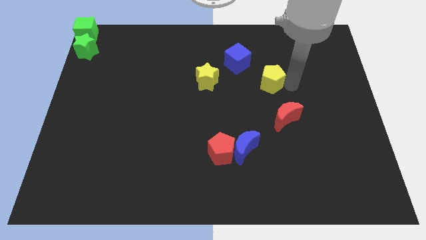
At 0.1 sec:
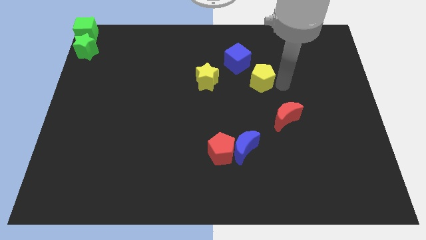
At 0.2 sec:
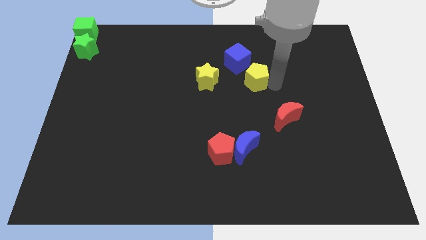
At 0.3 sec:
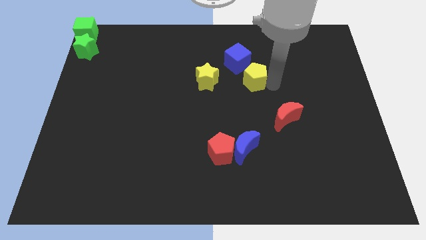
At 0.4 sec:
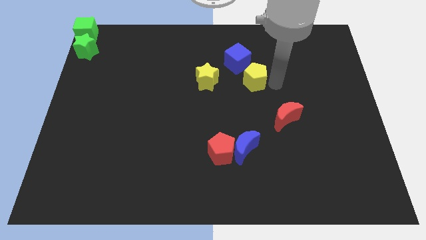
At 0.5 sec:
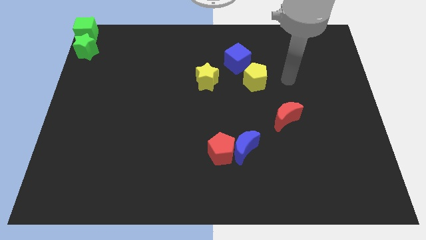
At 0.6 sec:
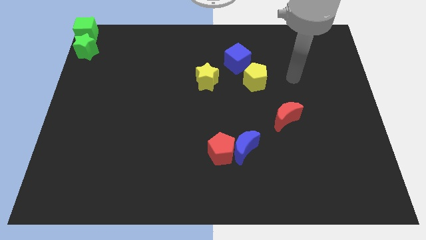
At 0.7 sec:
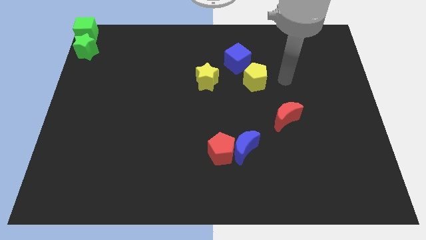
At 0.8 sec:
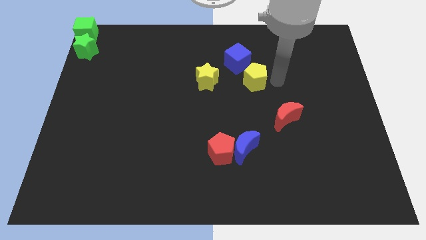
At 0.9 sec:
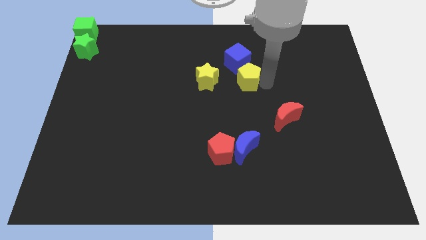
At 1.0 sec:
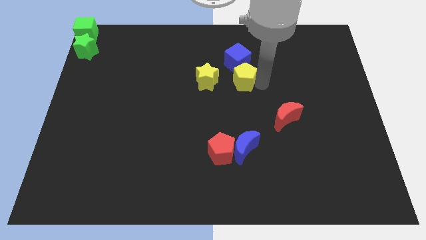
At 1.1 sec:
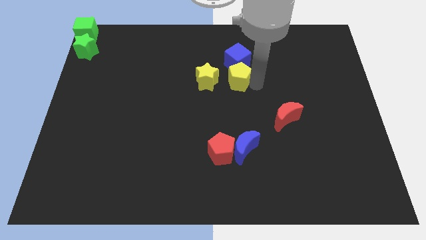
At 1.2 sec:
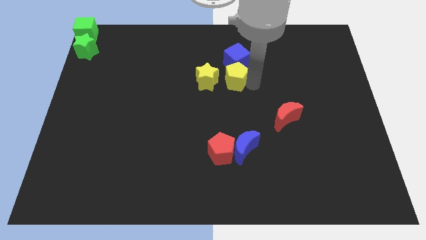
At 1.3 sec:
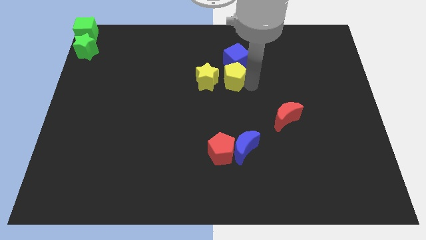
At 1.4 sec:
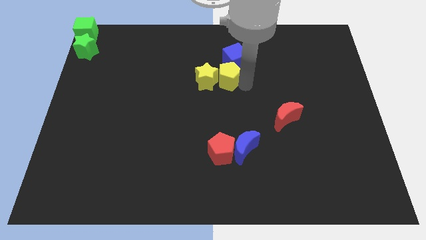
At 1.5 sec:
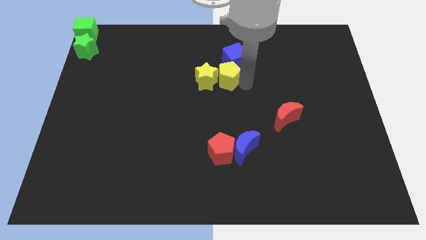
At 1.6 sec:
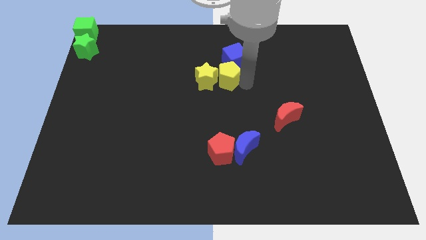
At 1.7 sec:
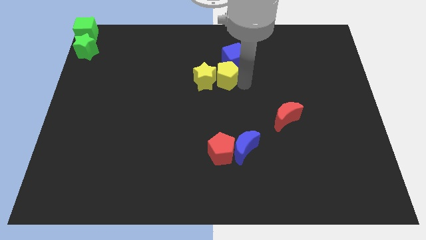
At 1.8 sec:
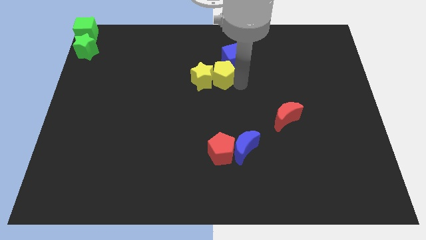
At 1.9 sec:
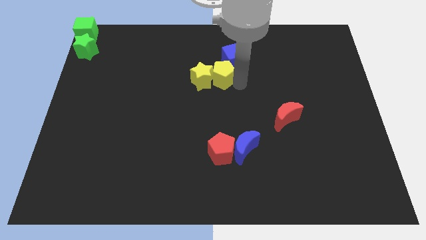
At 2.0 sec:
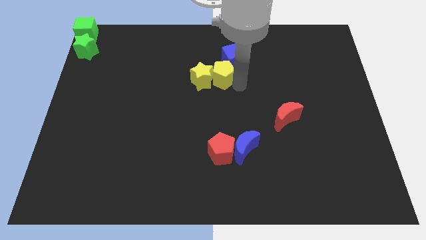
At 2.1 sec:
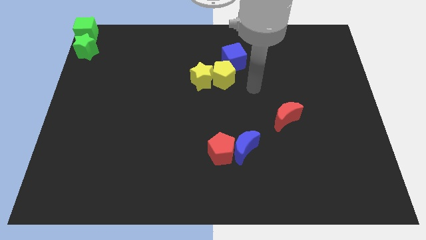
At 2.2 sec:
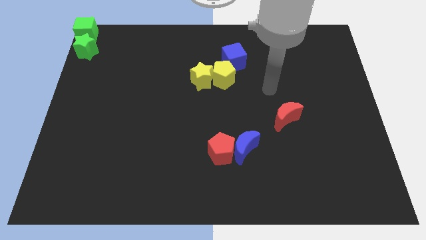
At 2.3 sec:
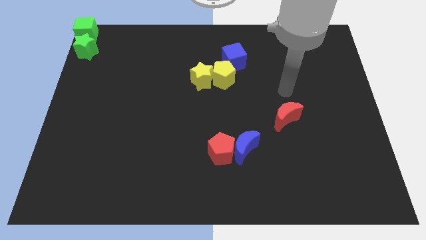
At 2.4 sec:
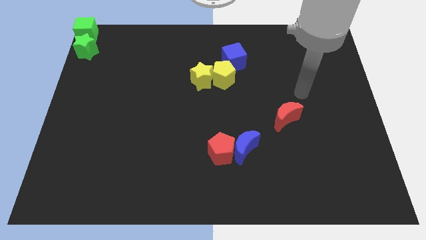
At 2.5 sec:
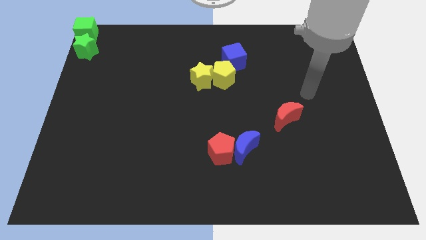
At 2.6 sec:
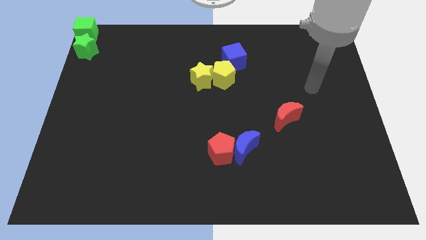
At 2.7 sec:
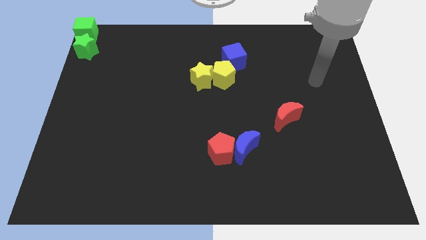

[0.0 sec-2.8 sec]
move the yellow pentagon into the right side of the yellow star

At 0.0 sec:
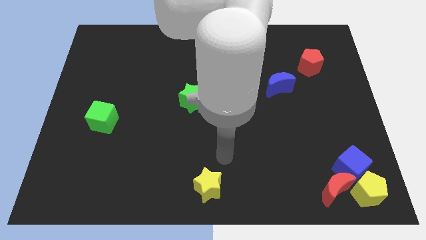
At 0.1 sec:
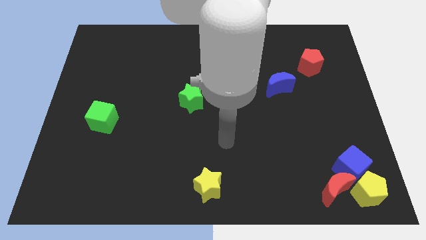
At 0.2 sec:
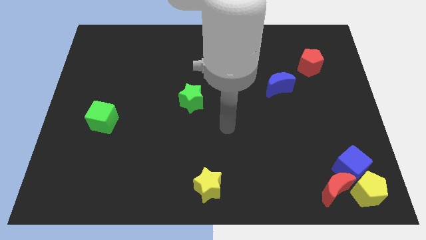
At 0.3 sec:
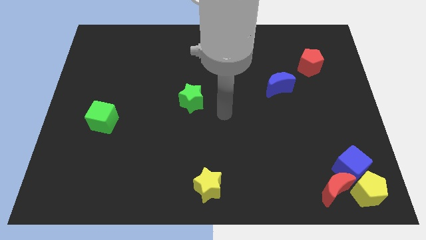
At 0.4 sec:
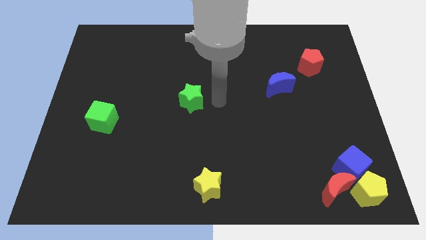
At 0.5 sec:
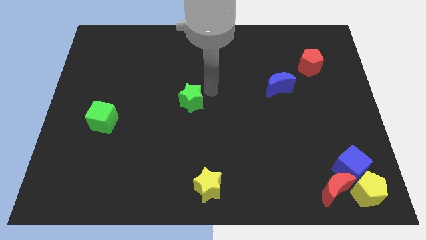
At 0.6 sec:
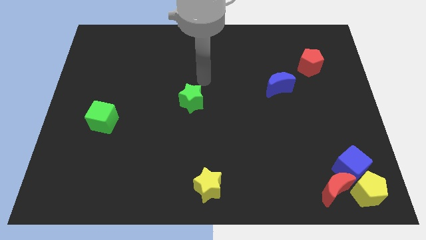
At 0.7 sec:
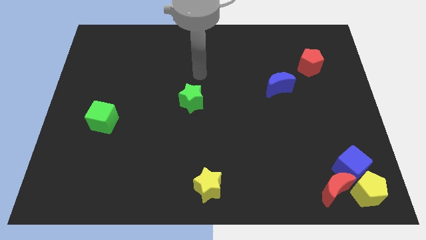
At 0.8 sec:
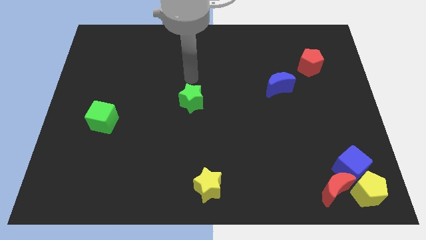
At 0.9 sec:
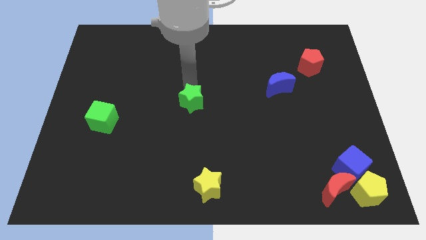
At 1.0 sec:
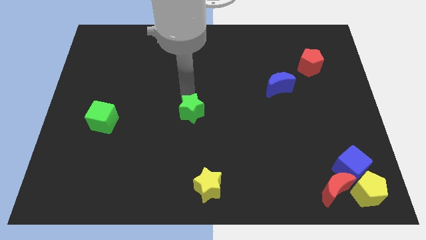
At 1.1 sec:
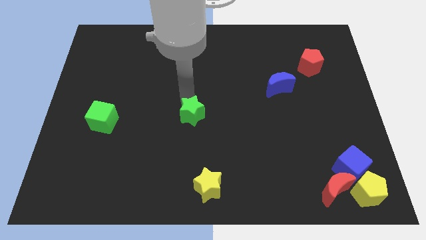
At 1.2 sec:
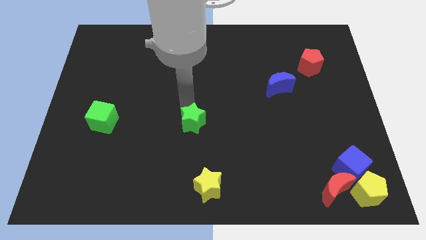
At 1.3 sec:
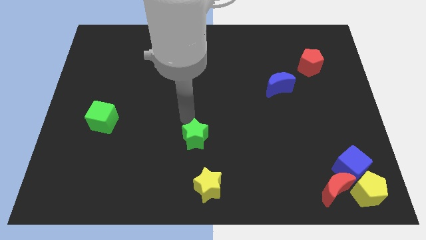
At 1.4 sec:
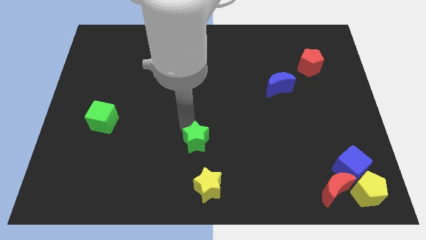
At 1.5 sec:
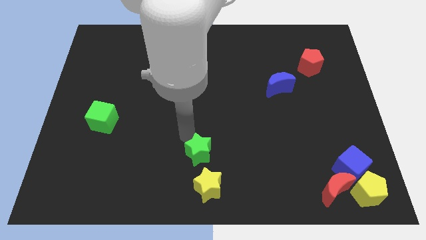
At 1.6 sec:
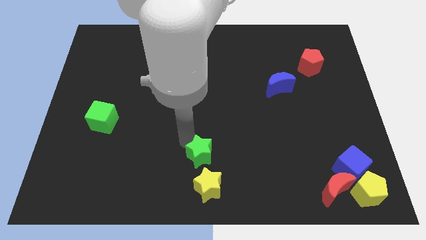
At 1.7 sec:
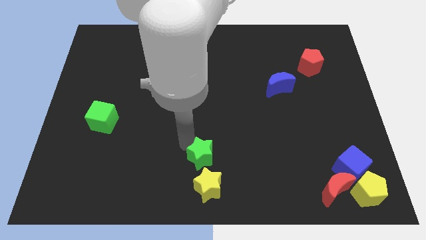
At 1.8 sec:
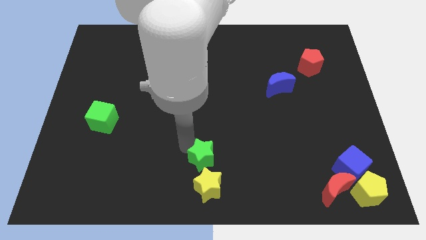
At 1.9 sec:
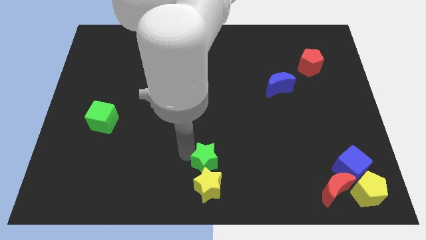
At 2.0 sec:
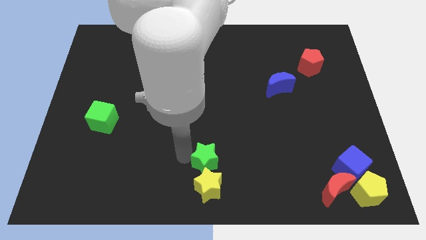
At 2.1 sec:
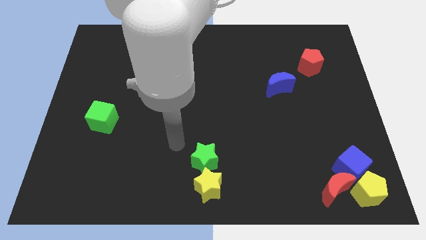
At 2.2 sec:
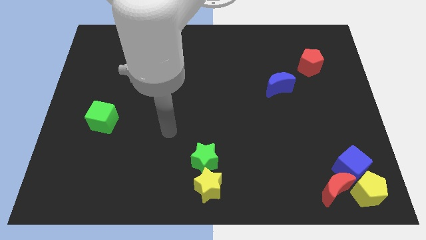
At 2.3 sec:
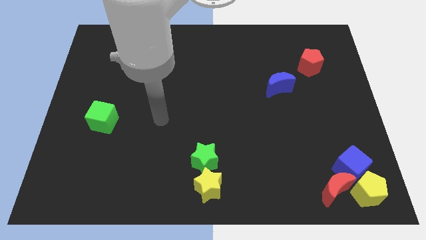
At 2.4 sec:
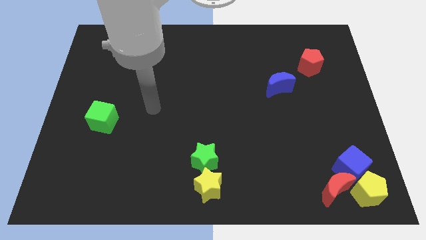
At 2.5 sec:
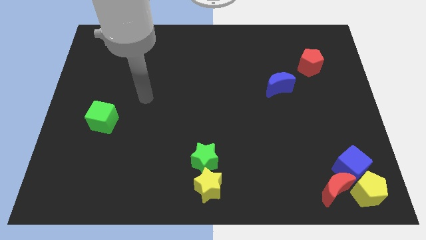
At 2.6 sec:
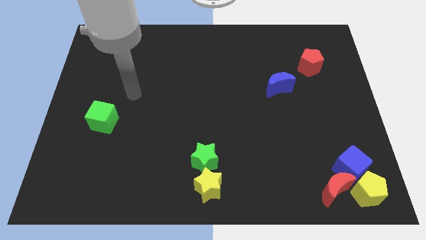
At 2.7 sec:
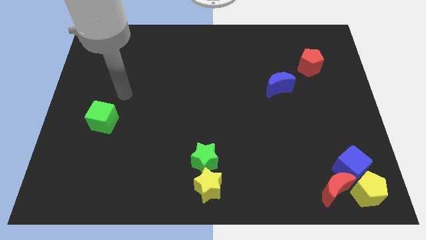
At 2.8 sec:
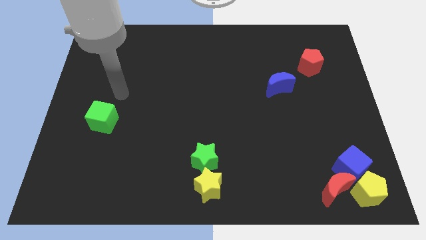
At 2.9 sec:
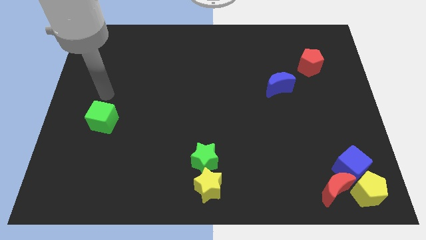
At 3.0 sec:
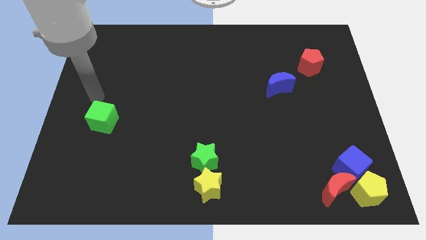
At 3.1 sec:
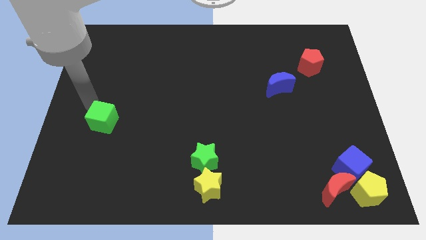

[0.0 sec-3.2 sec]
place the green star towards the top of the yellow star

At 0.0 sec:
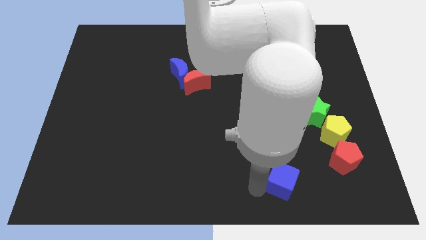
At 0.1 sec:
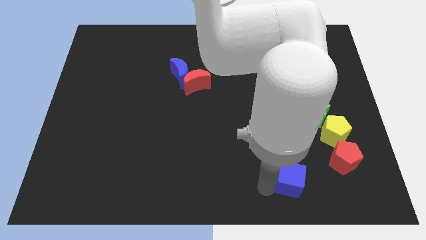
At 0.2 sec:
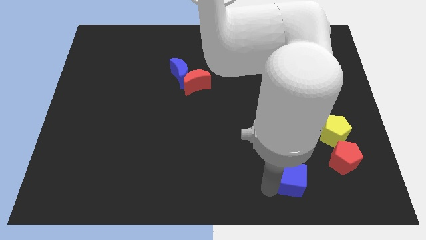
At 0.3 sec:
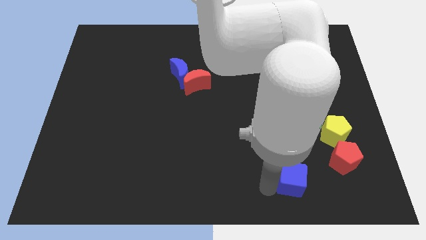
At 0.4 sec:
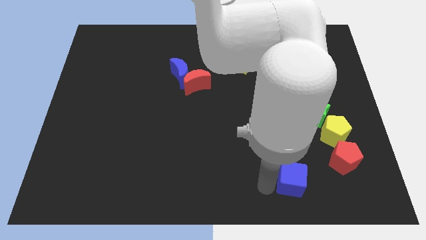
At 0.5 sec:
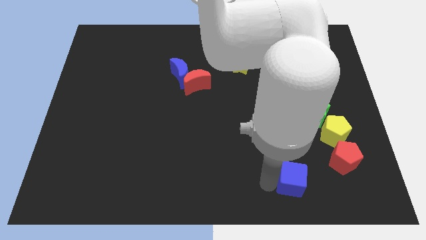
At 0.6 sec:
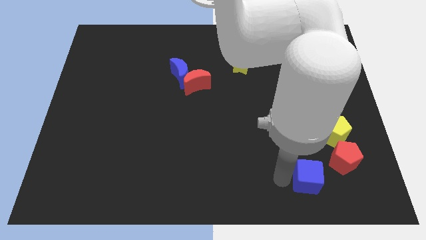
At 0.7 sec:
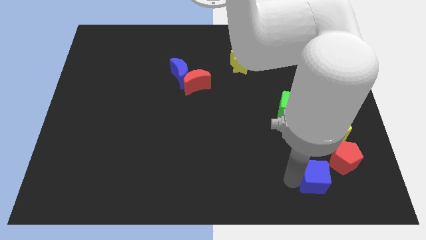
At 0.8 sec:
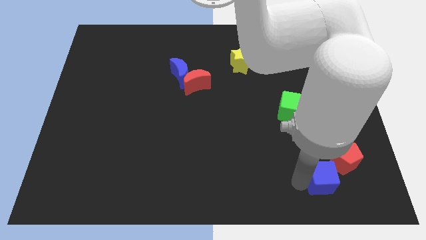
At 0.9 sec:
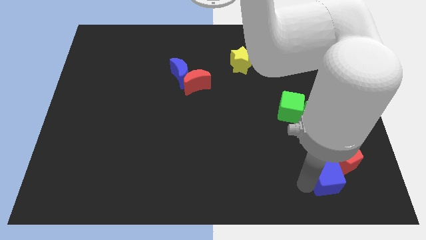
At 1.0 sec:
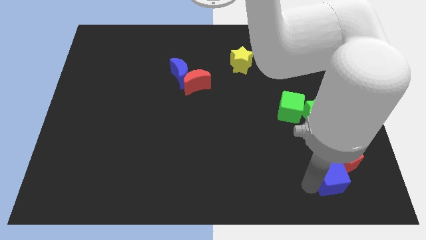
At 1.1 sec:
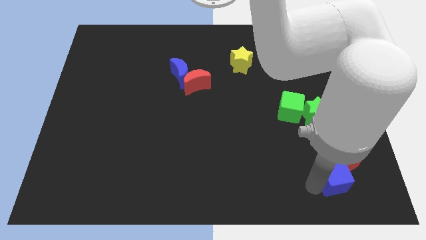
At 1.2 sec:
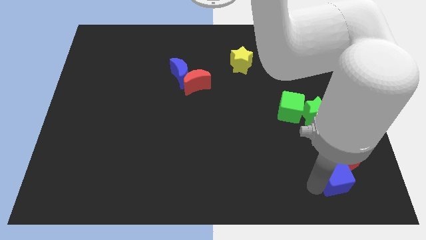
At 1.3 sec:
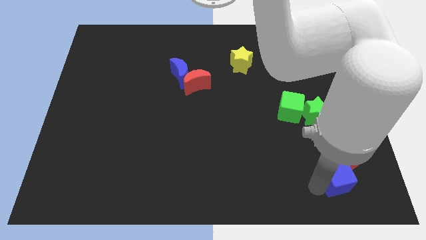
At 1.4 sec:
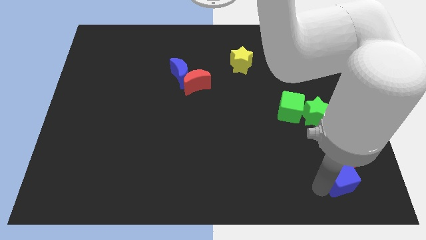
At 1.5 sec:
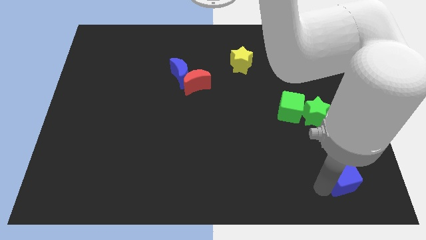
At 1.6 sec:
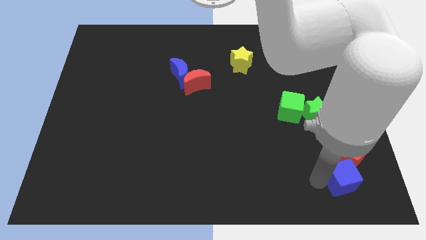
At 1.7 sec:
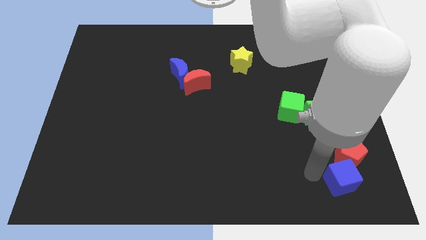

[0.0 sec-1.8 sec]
place the blue cube below the red pentagon

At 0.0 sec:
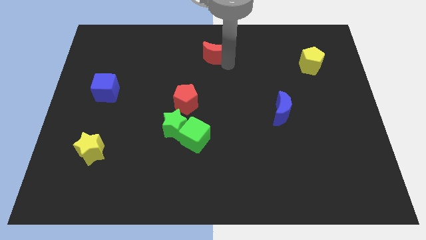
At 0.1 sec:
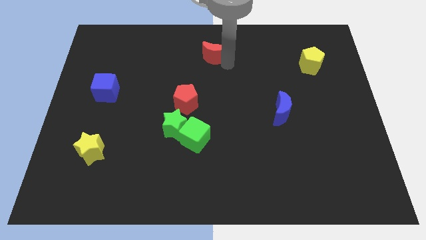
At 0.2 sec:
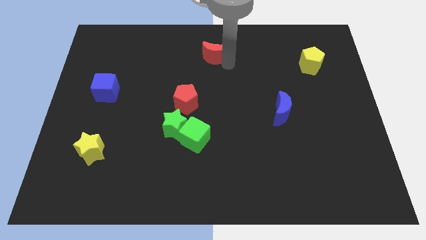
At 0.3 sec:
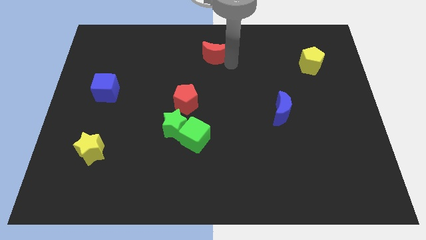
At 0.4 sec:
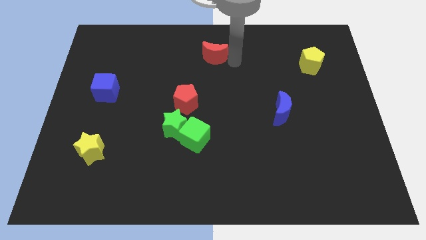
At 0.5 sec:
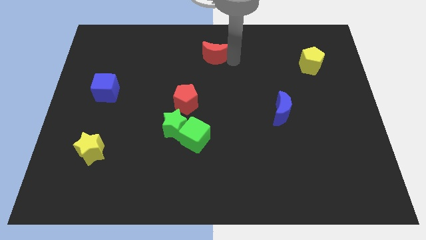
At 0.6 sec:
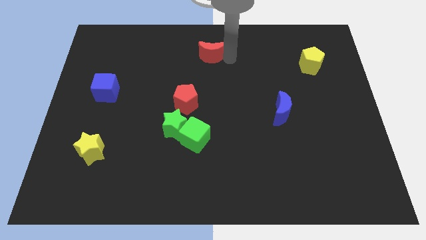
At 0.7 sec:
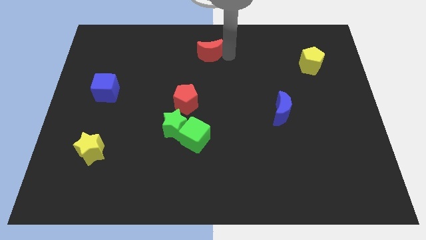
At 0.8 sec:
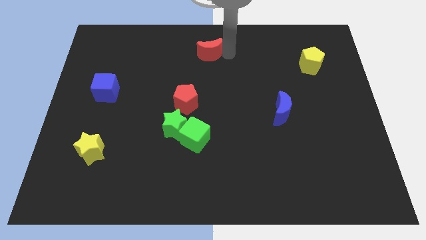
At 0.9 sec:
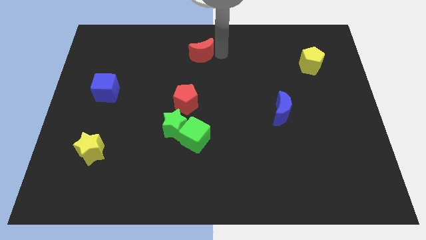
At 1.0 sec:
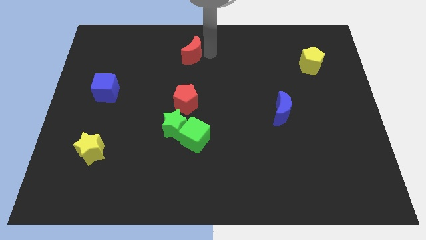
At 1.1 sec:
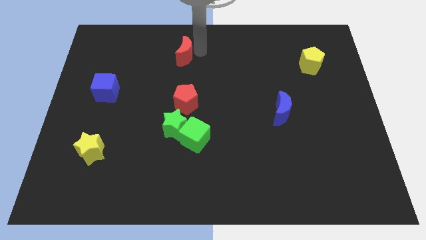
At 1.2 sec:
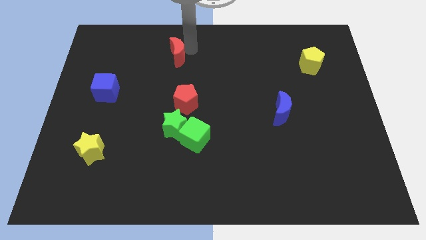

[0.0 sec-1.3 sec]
move the red moon above the red pentagon
